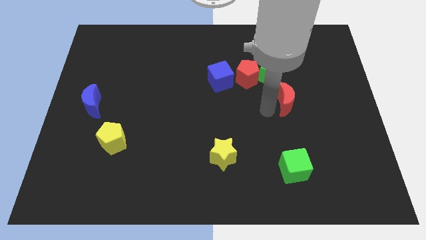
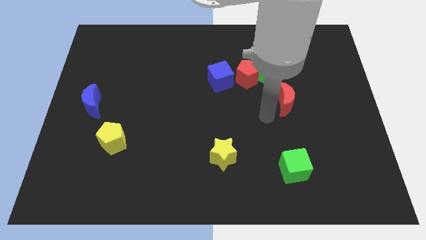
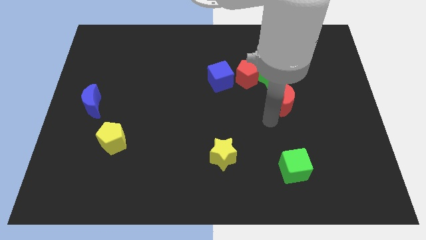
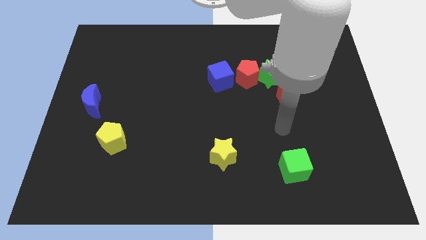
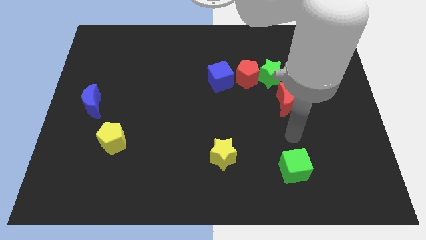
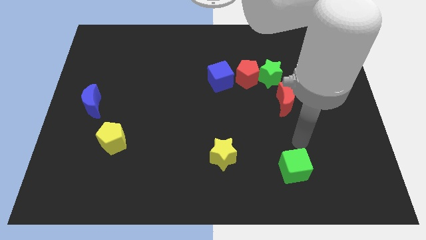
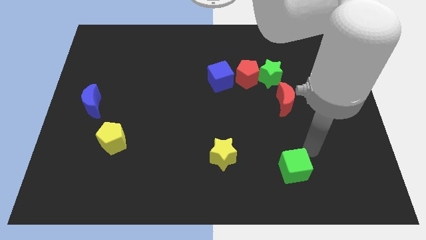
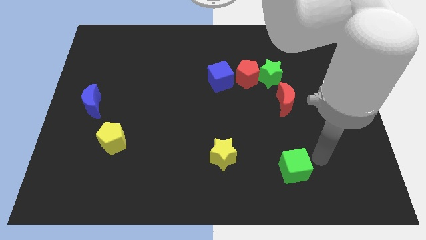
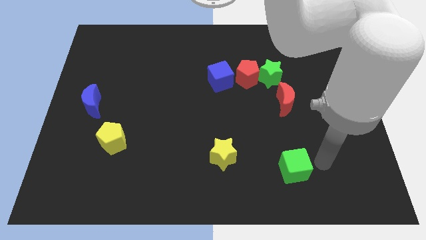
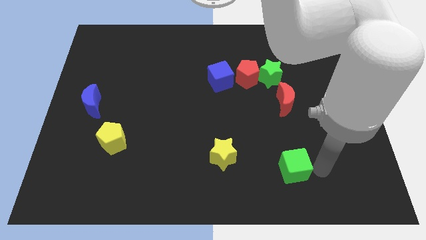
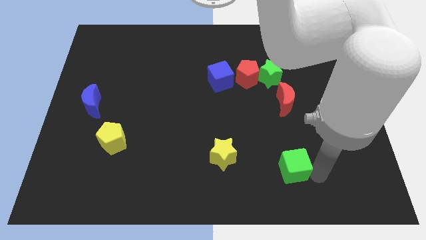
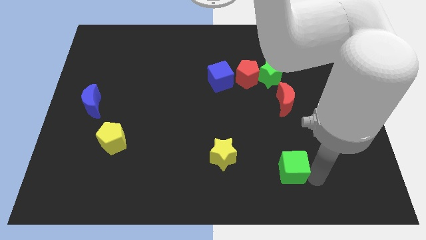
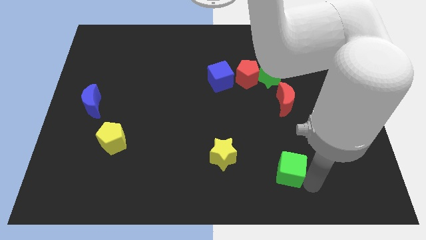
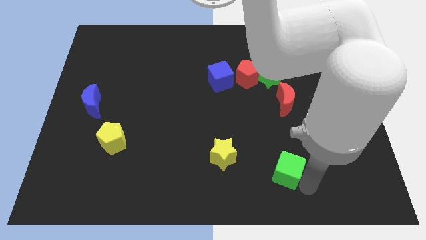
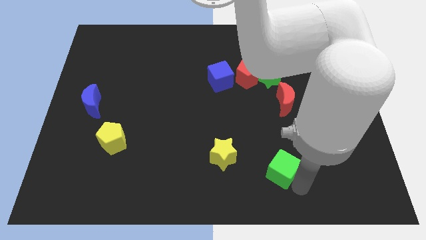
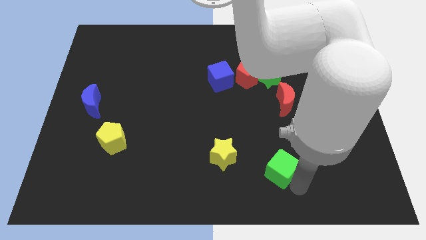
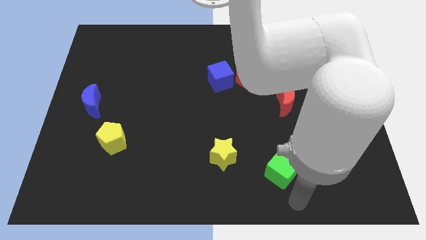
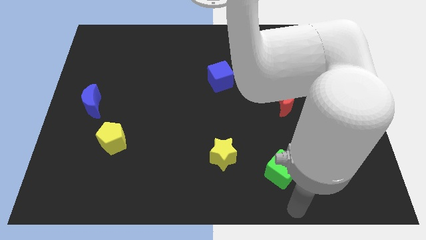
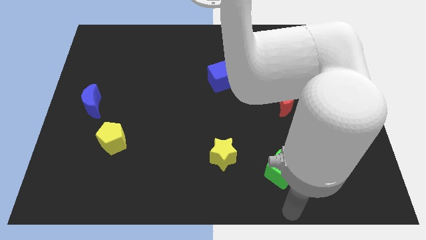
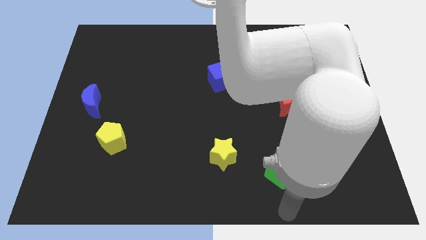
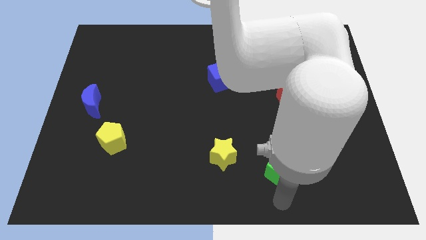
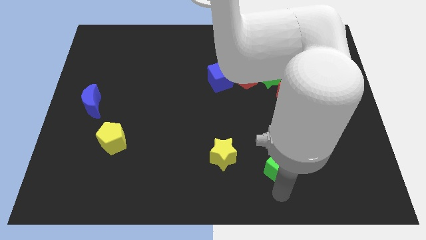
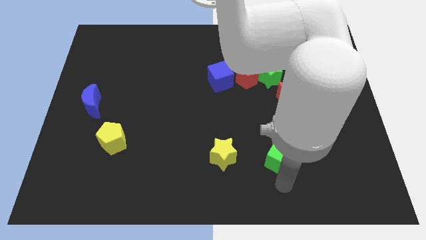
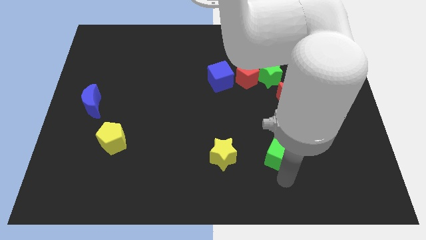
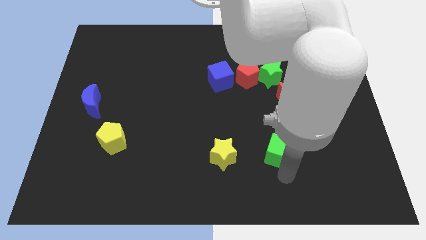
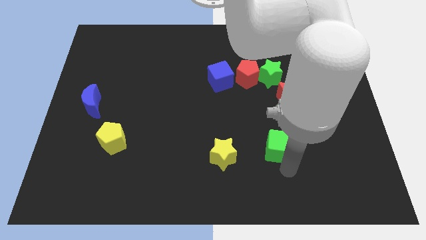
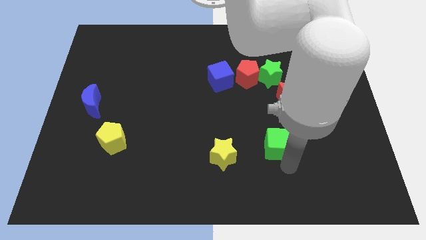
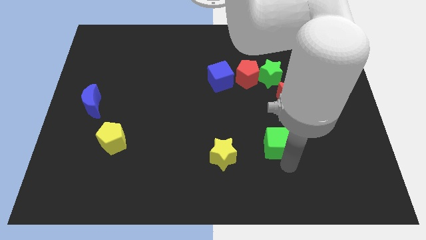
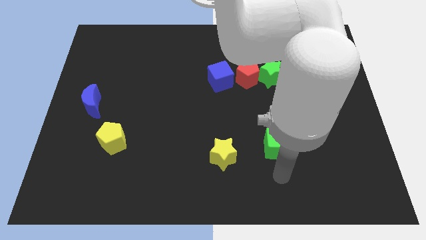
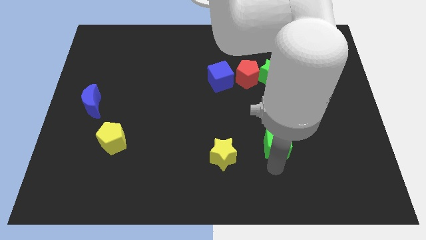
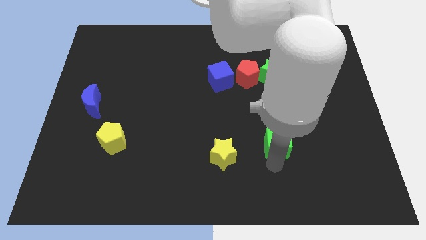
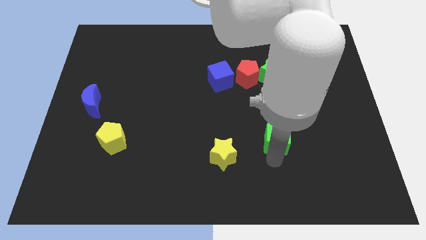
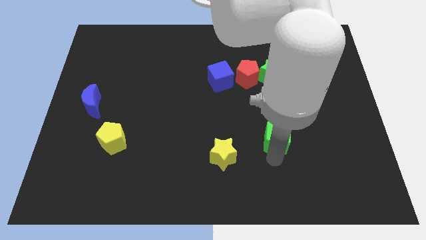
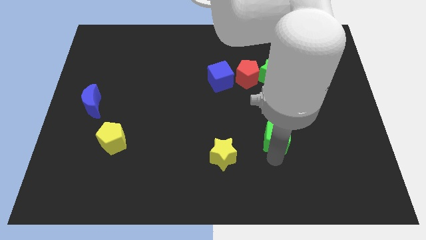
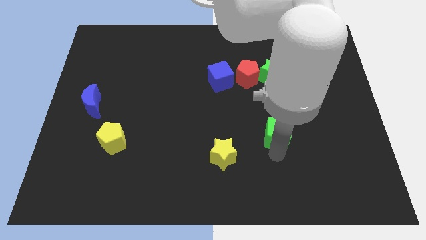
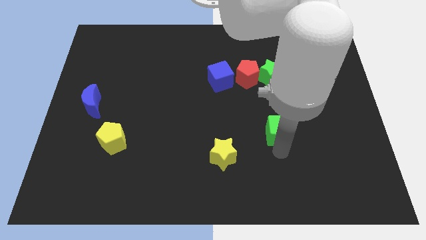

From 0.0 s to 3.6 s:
drag the green cube diagonally on the top right side of the yellow star

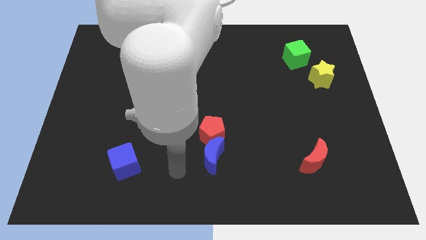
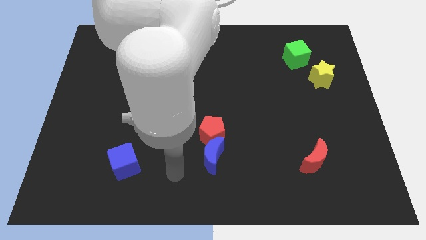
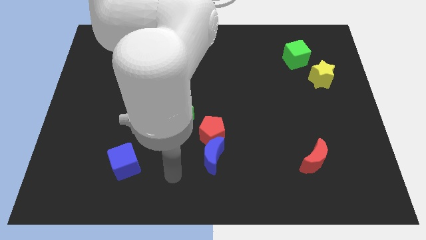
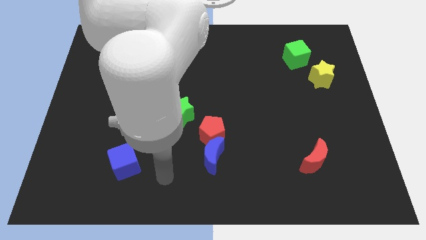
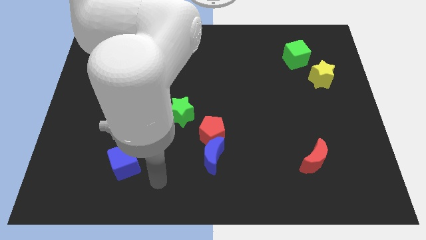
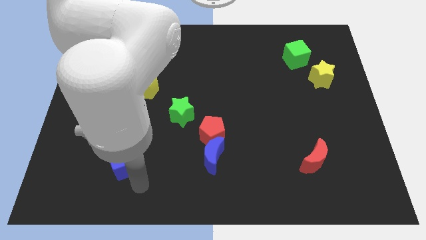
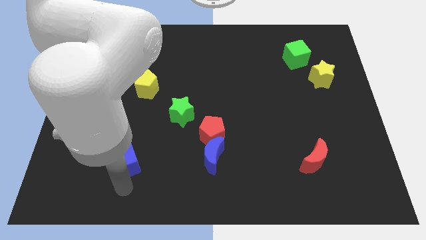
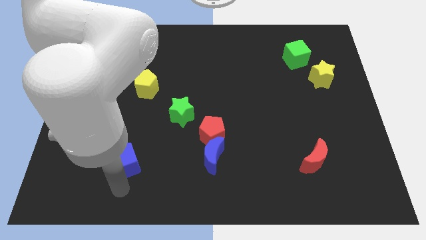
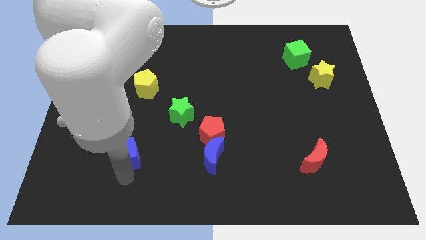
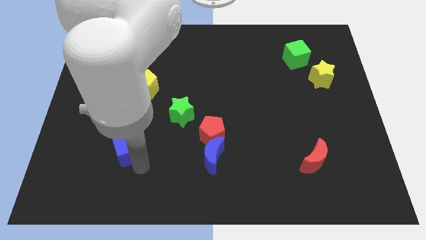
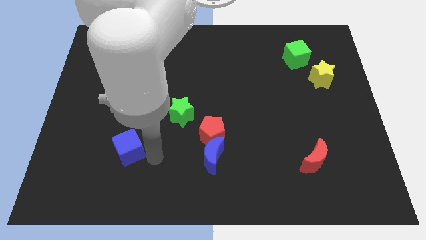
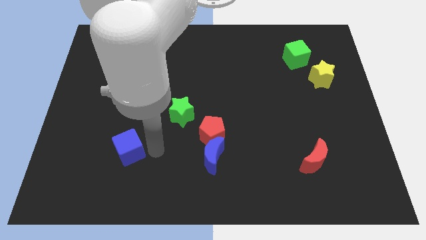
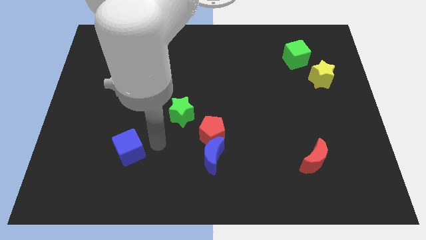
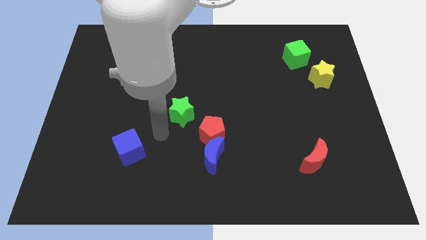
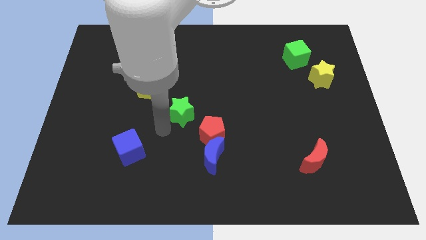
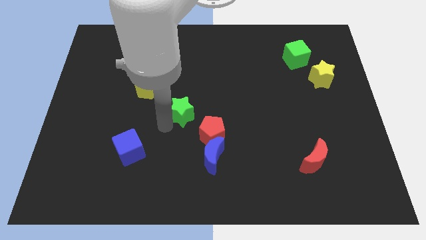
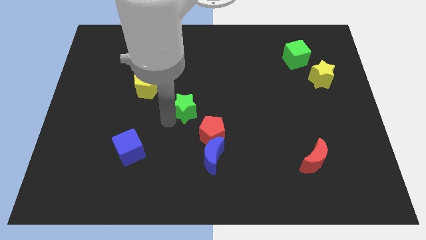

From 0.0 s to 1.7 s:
slightly push the blue cube towards up

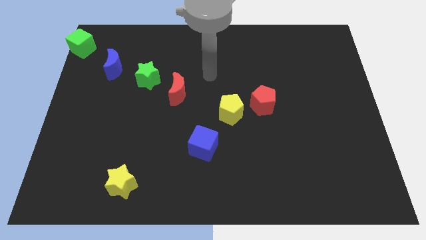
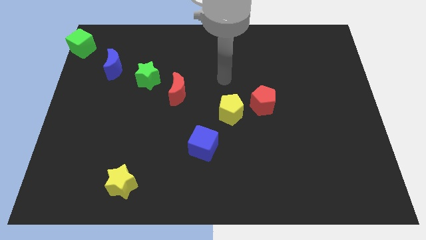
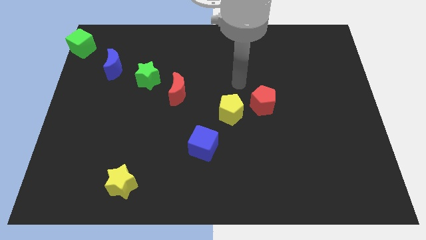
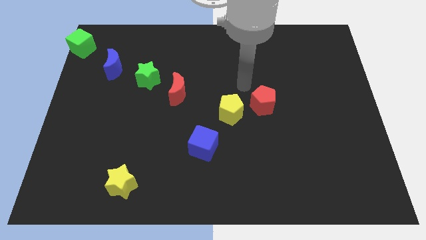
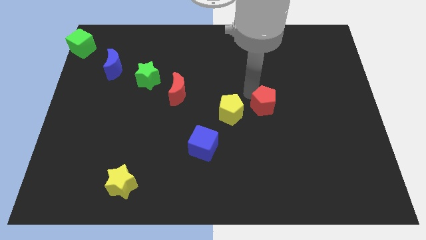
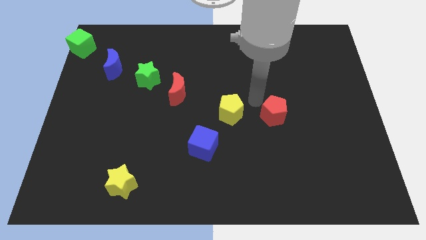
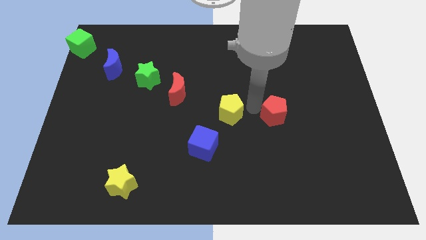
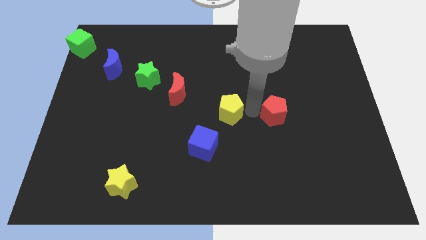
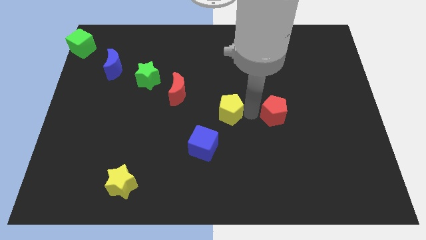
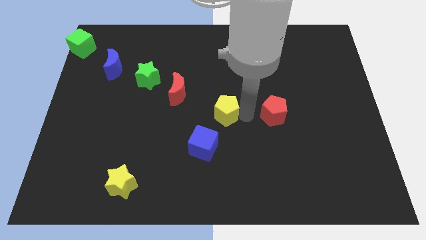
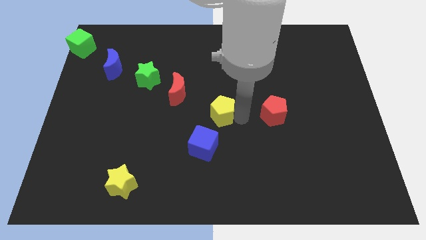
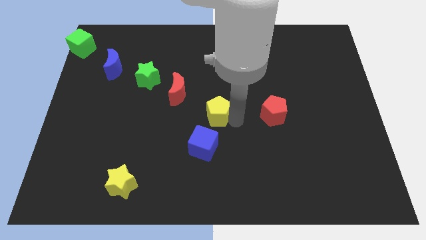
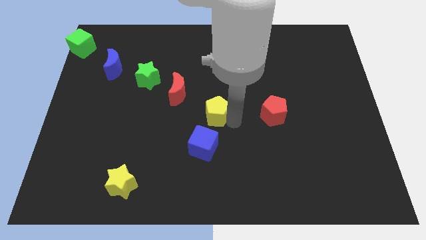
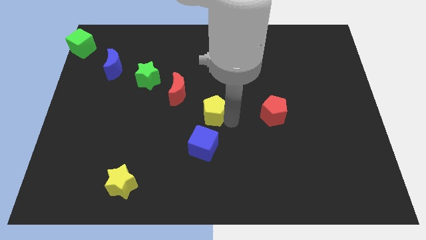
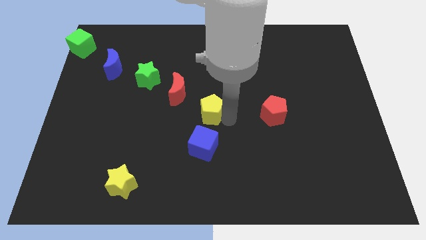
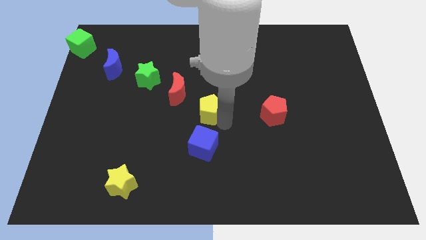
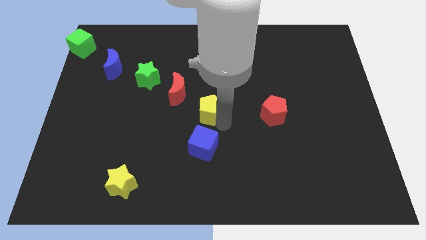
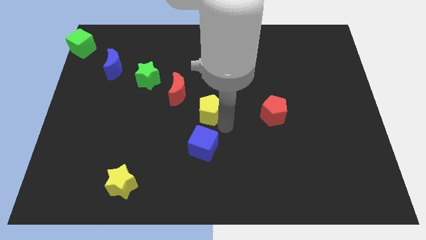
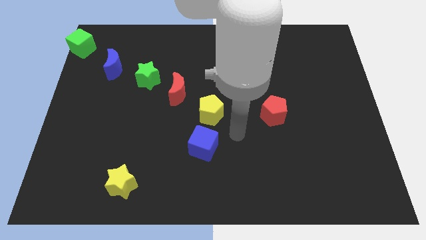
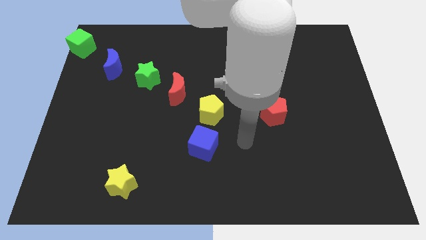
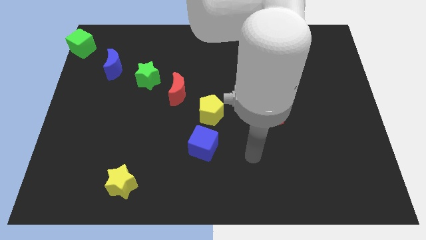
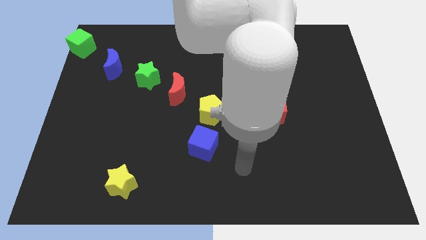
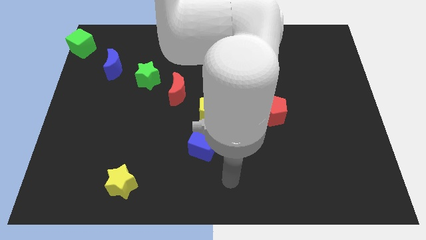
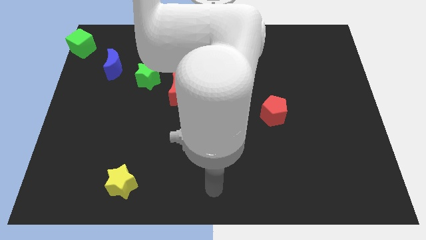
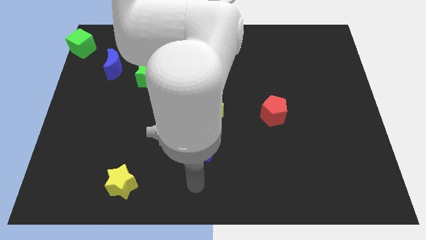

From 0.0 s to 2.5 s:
separate the yellow pentagon from red pentagon

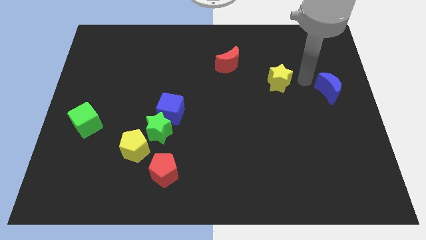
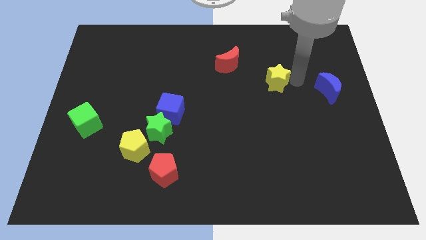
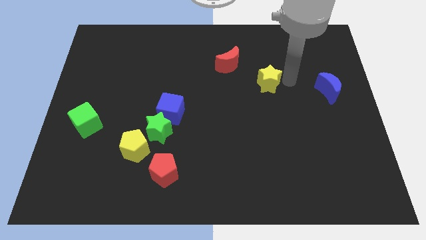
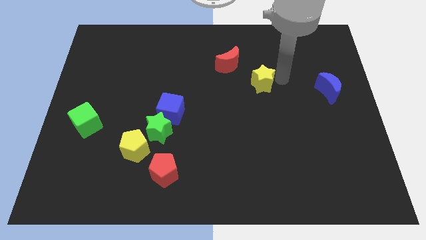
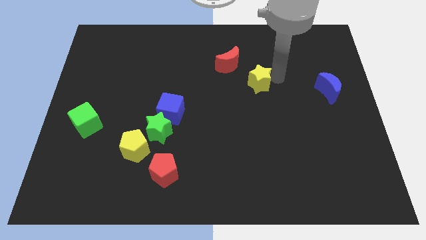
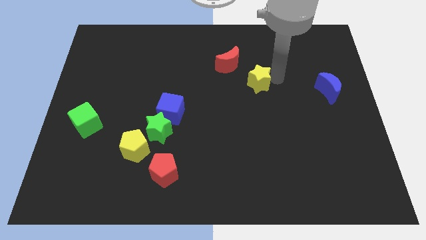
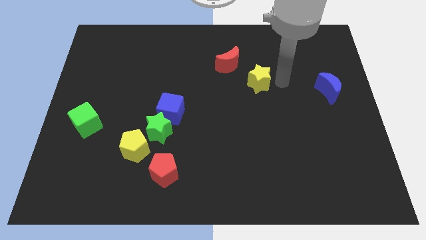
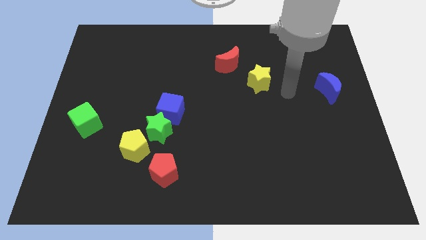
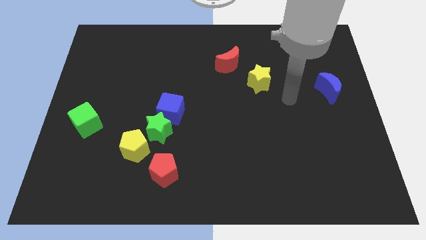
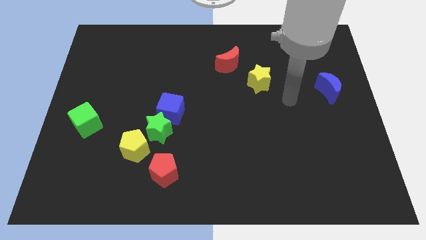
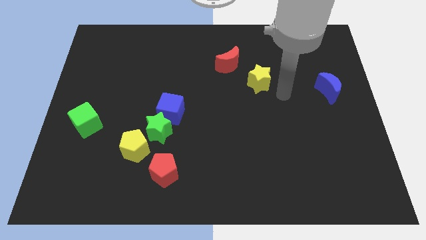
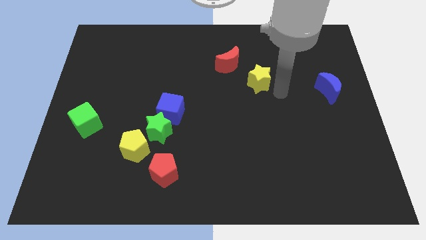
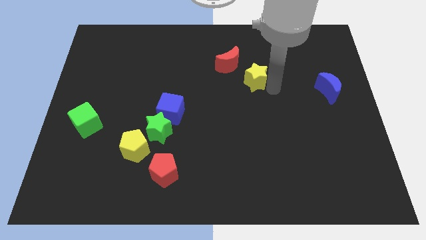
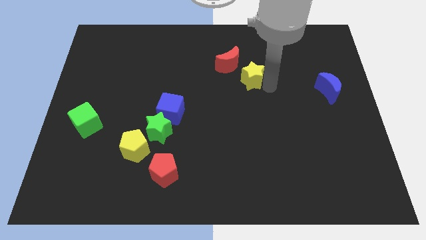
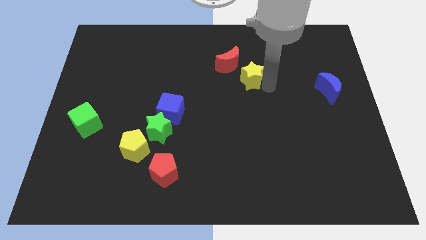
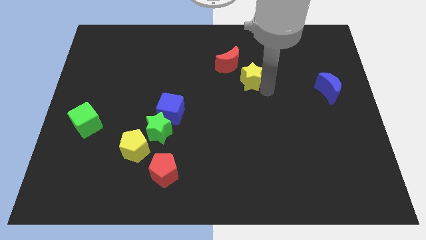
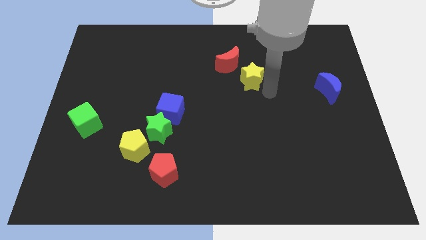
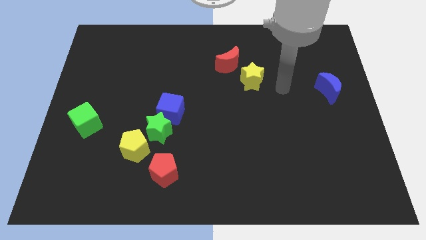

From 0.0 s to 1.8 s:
move the yellow star towards red crescent
